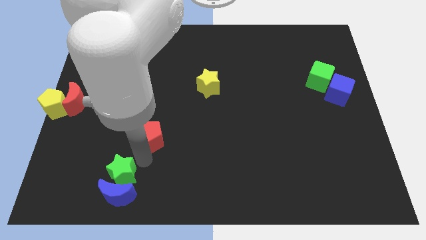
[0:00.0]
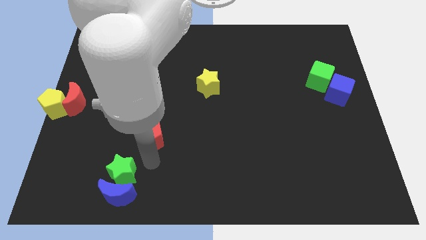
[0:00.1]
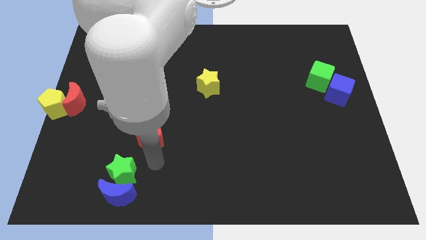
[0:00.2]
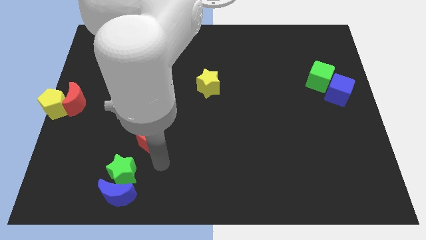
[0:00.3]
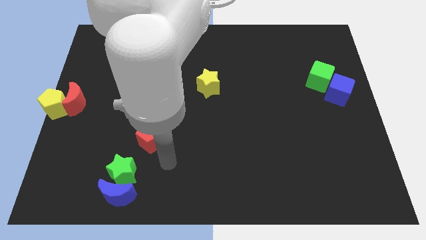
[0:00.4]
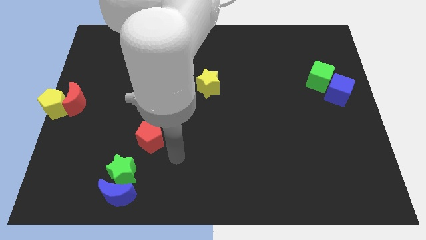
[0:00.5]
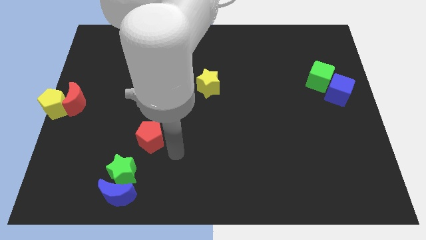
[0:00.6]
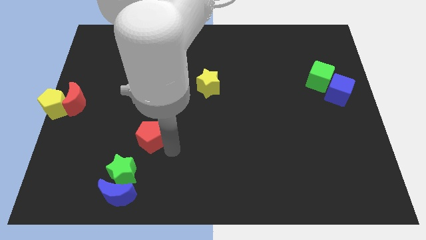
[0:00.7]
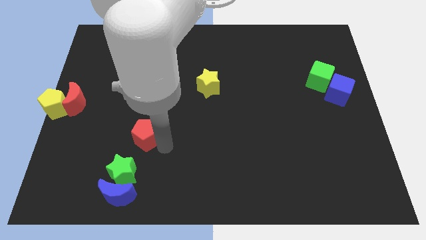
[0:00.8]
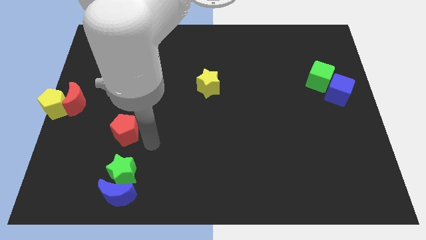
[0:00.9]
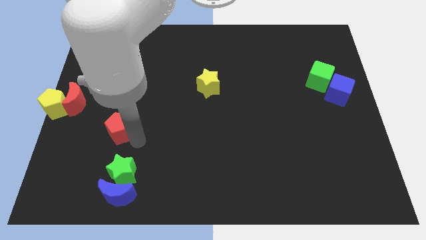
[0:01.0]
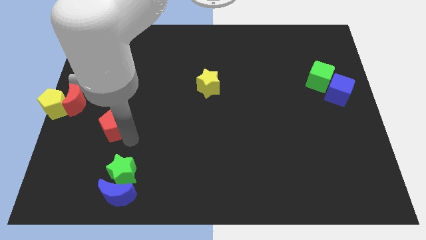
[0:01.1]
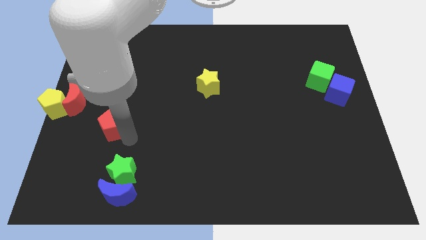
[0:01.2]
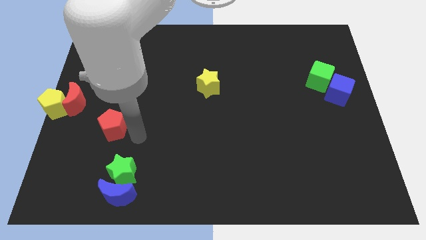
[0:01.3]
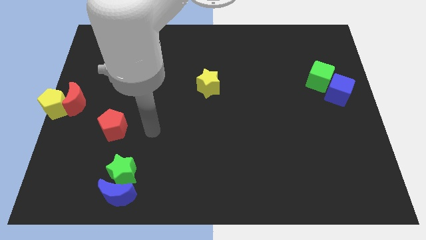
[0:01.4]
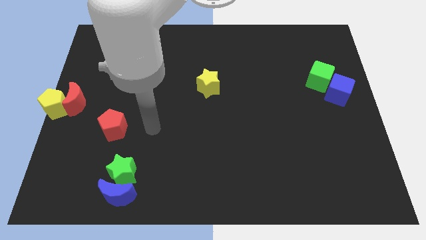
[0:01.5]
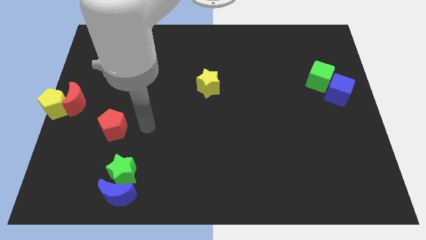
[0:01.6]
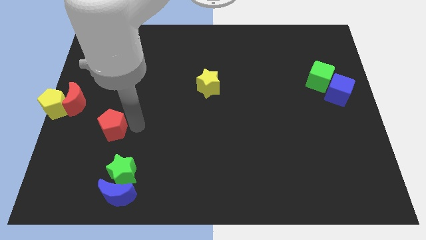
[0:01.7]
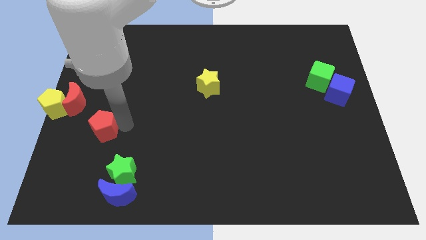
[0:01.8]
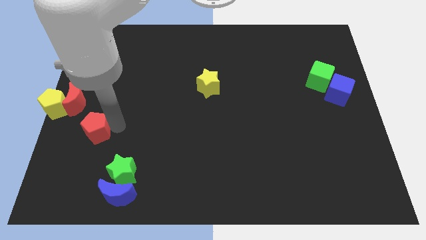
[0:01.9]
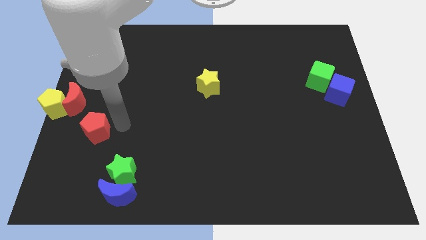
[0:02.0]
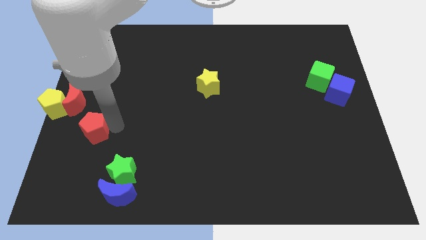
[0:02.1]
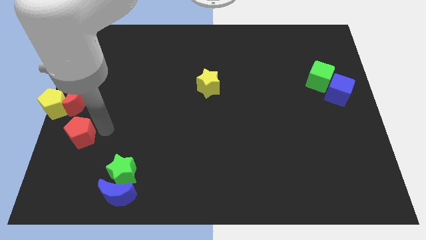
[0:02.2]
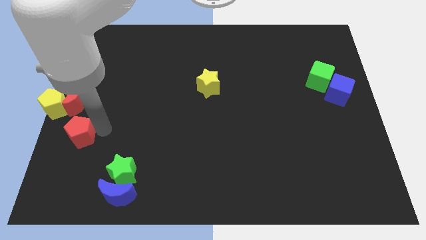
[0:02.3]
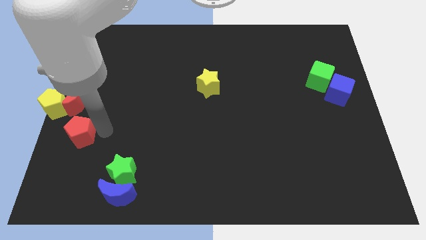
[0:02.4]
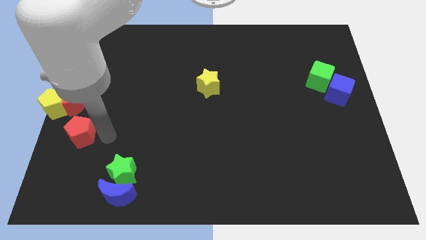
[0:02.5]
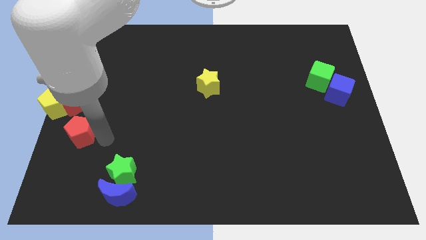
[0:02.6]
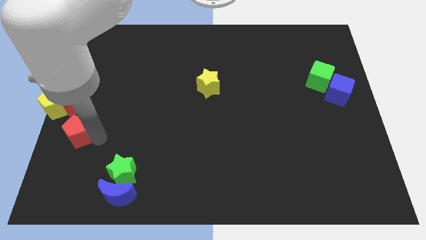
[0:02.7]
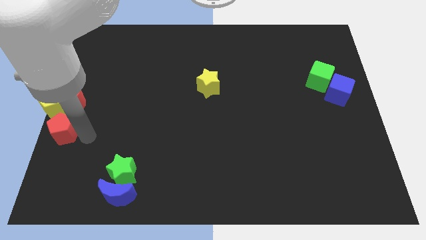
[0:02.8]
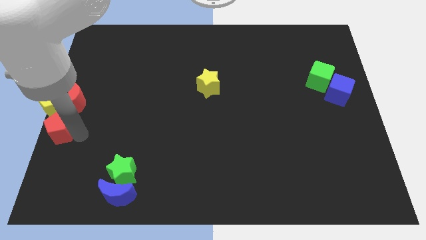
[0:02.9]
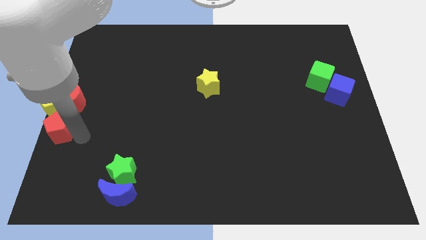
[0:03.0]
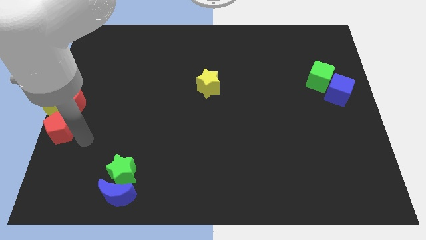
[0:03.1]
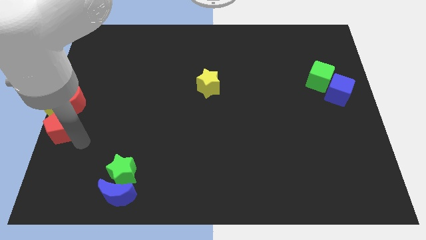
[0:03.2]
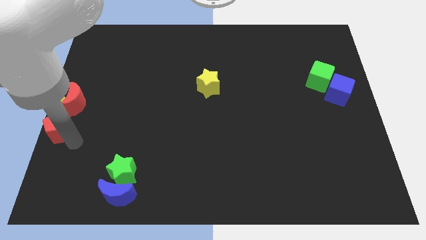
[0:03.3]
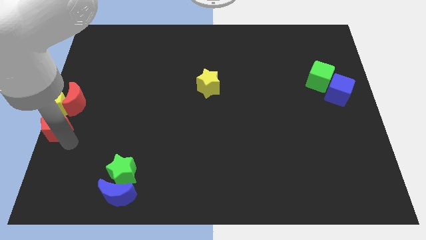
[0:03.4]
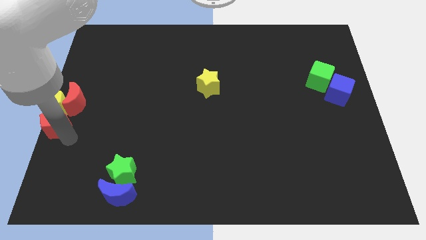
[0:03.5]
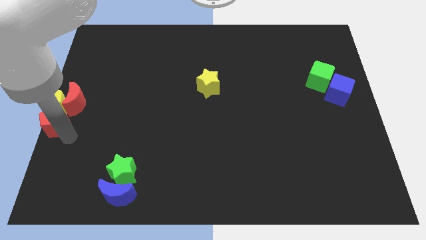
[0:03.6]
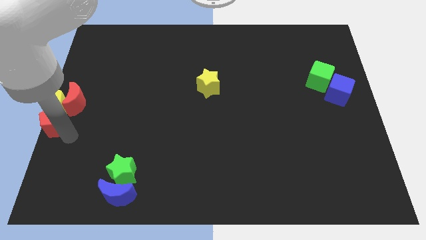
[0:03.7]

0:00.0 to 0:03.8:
push the red pentagon into the bottom side of the yellow pentagon

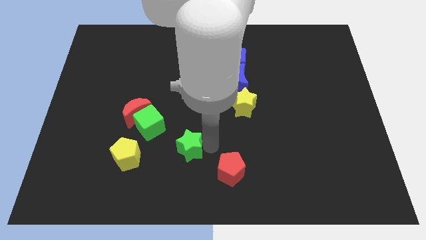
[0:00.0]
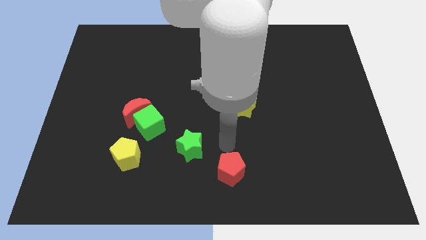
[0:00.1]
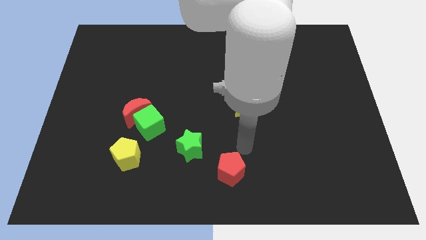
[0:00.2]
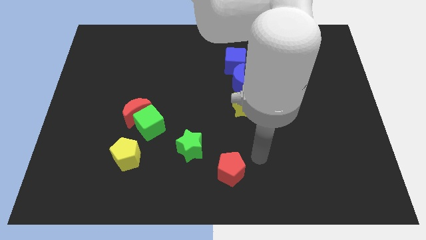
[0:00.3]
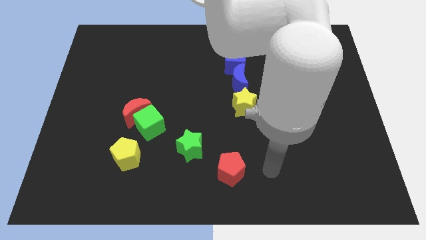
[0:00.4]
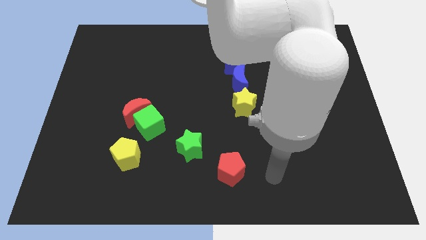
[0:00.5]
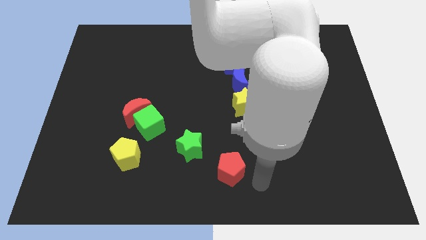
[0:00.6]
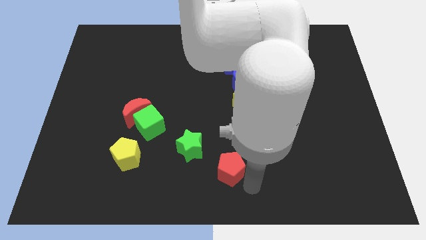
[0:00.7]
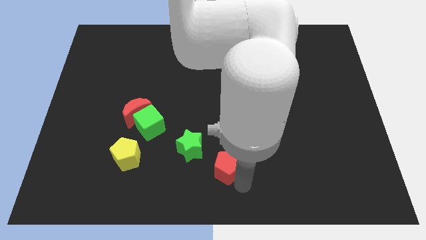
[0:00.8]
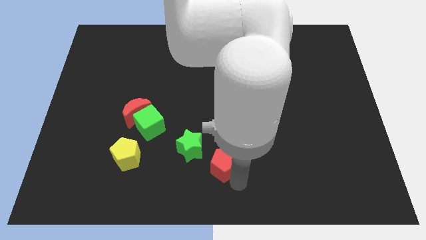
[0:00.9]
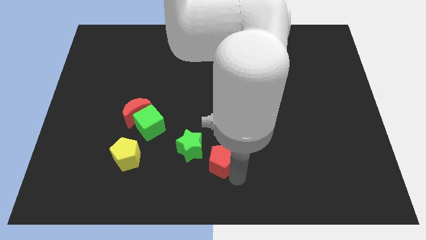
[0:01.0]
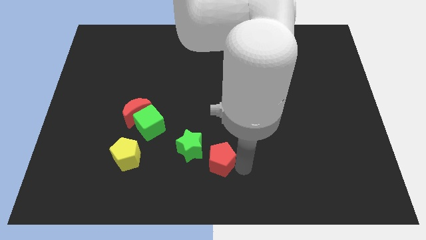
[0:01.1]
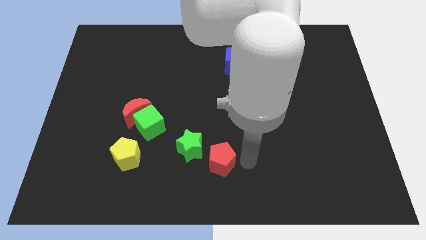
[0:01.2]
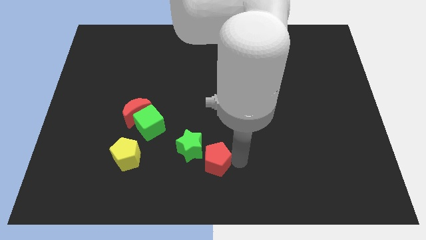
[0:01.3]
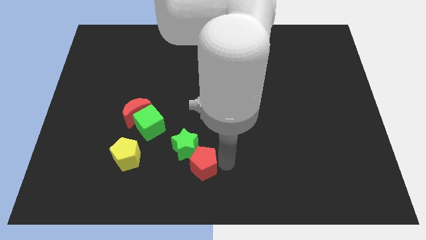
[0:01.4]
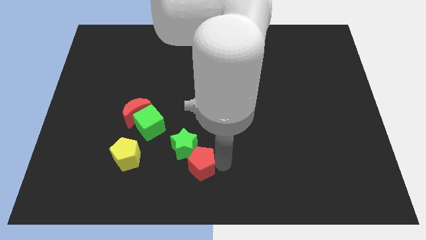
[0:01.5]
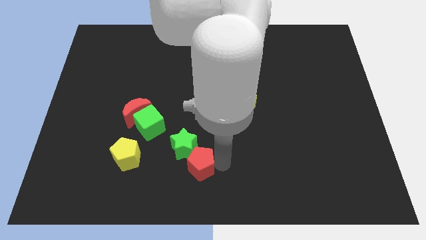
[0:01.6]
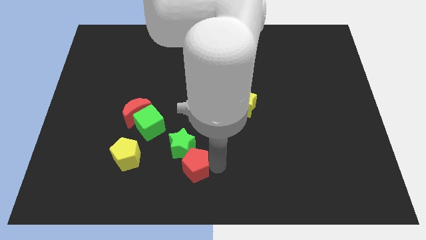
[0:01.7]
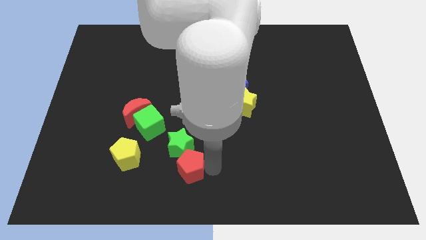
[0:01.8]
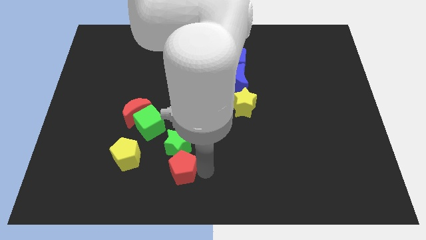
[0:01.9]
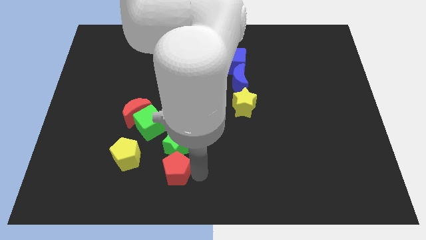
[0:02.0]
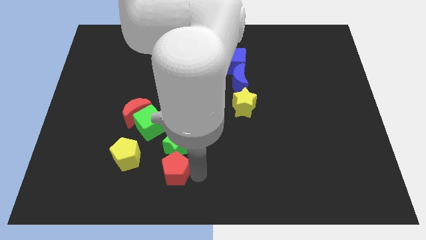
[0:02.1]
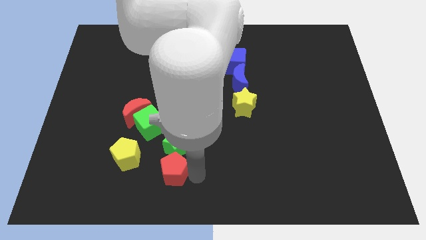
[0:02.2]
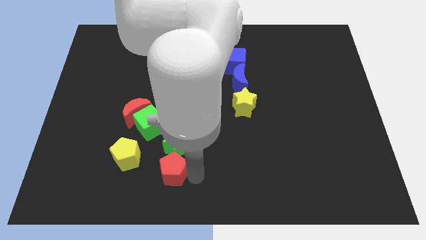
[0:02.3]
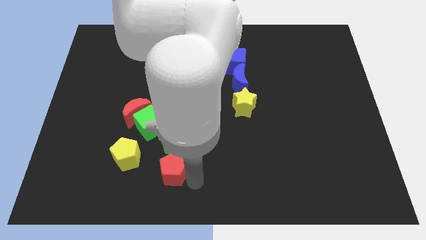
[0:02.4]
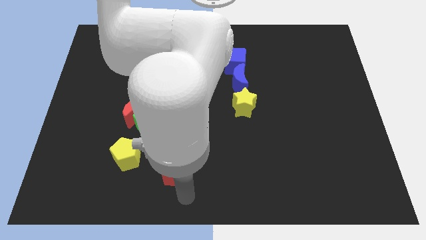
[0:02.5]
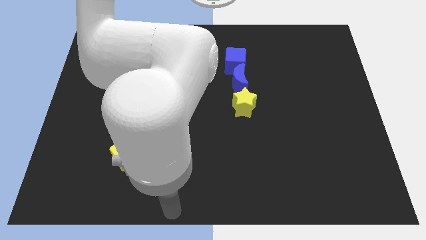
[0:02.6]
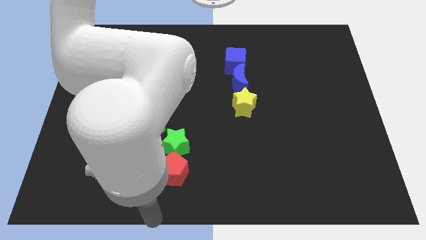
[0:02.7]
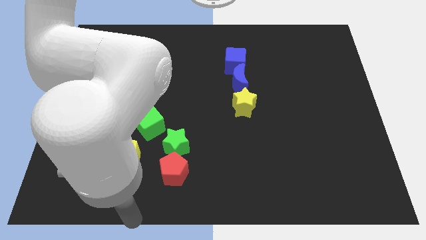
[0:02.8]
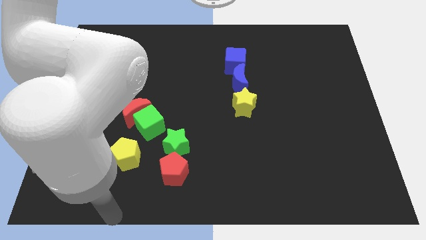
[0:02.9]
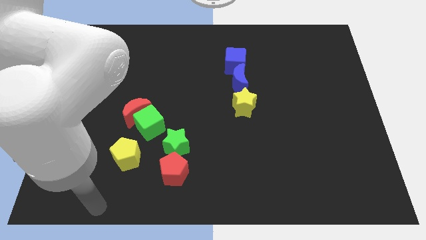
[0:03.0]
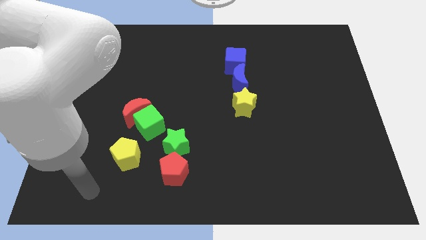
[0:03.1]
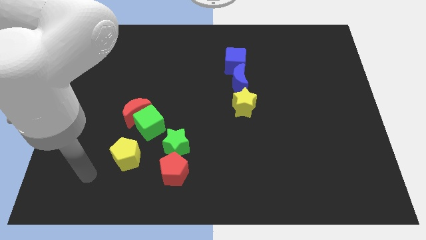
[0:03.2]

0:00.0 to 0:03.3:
place the red pentagon to the bottom side of the green star

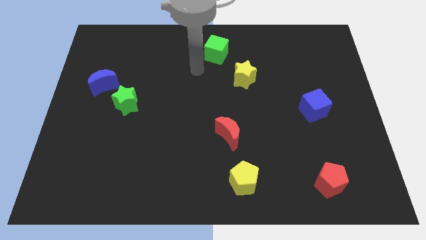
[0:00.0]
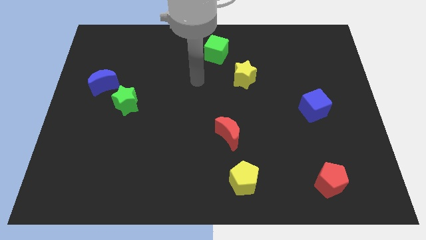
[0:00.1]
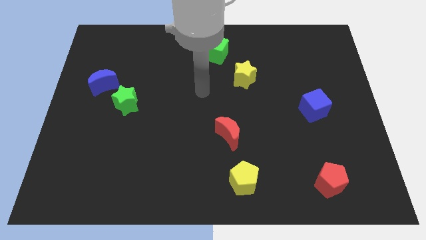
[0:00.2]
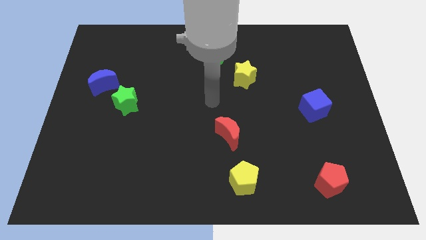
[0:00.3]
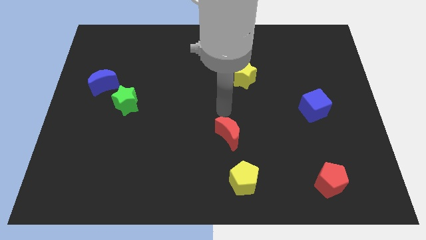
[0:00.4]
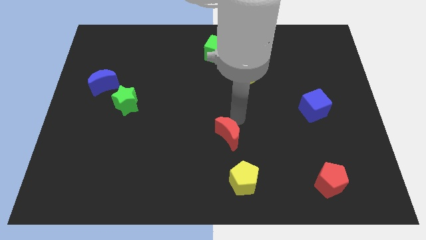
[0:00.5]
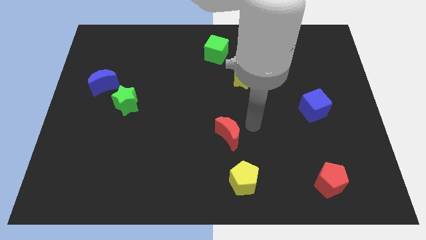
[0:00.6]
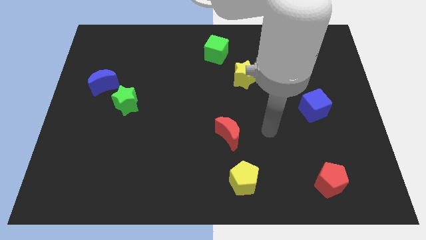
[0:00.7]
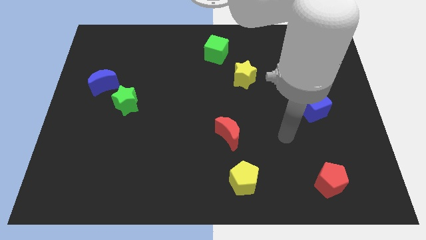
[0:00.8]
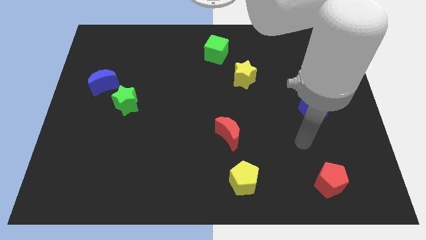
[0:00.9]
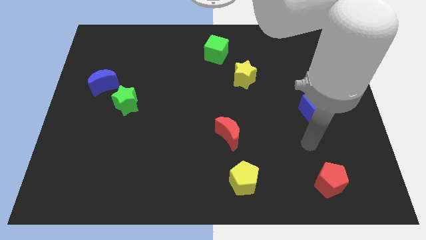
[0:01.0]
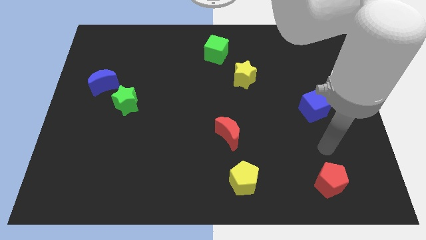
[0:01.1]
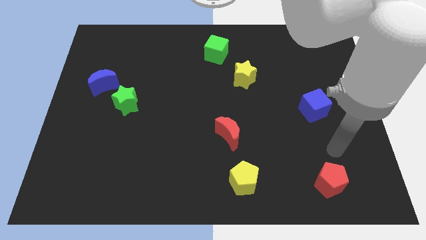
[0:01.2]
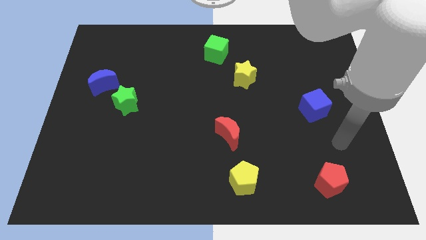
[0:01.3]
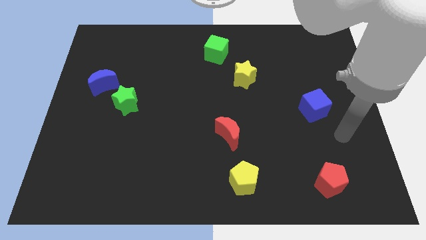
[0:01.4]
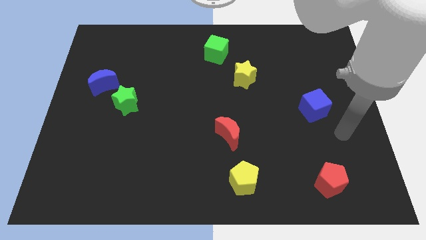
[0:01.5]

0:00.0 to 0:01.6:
move your arm away from the green cube

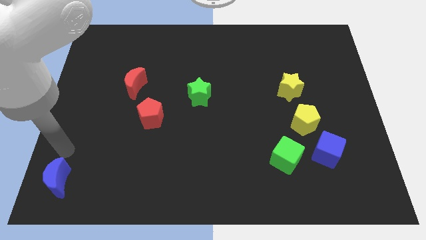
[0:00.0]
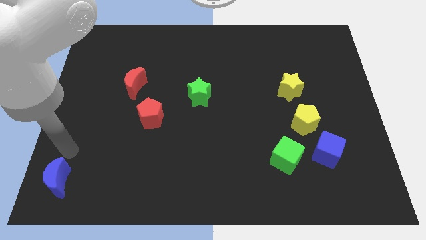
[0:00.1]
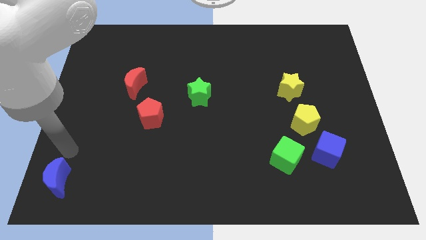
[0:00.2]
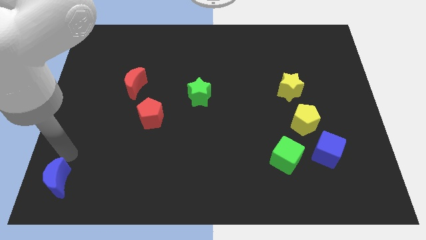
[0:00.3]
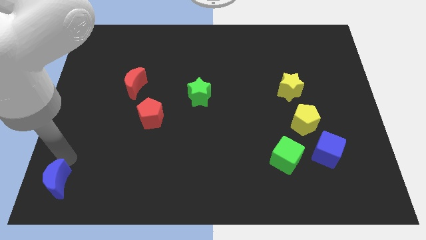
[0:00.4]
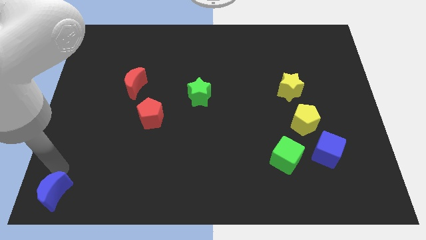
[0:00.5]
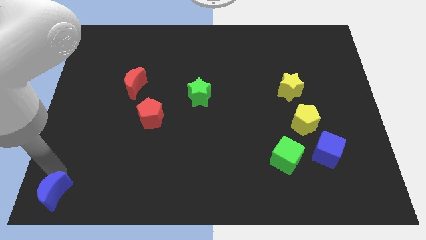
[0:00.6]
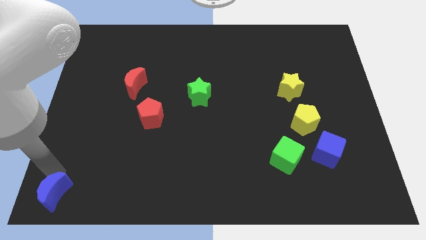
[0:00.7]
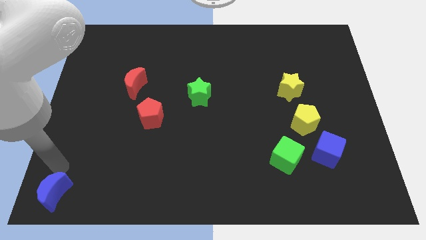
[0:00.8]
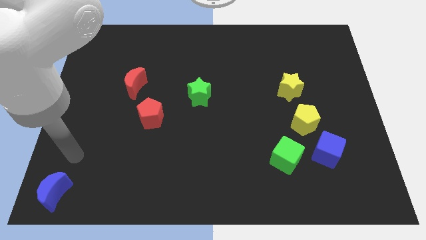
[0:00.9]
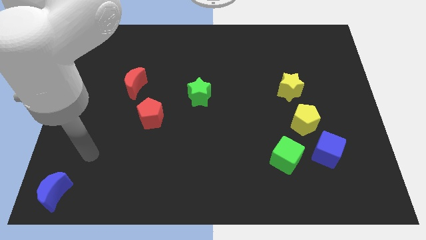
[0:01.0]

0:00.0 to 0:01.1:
move blue moon towards bottom left
